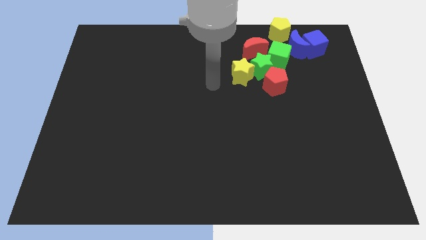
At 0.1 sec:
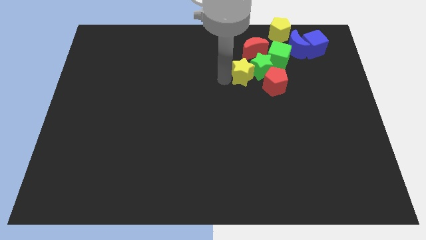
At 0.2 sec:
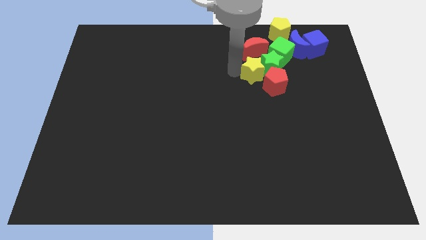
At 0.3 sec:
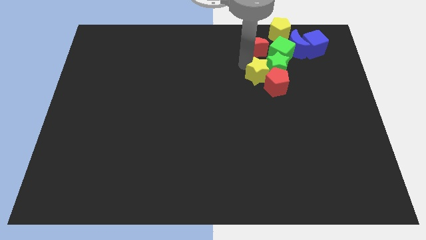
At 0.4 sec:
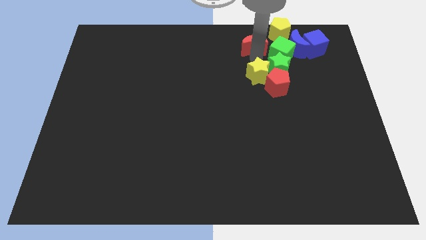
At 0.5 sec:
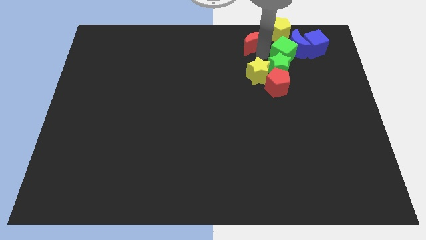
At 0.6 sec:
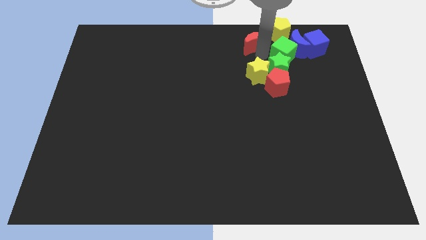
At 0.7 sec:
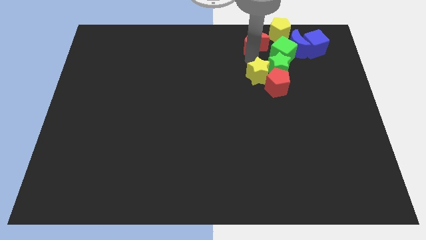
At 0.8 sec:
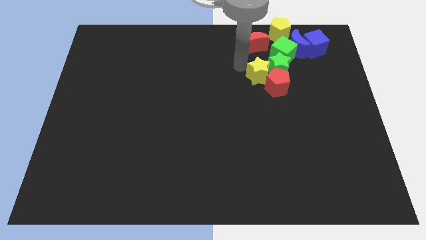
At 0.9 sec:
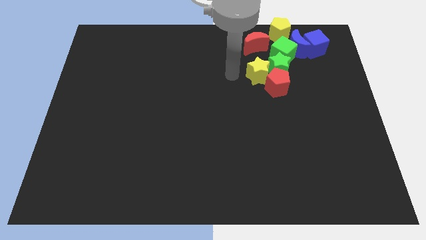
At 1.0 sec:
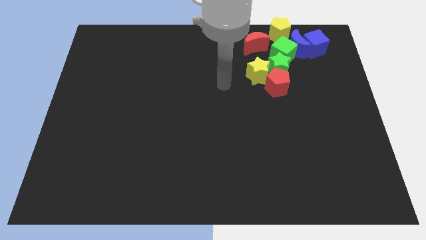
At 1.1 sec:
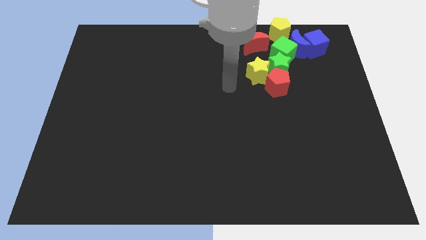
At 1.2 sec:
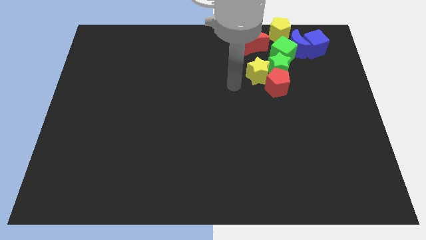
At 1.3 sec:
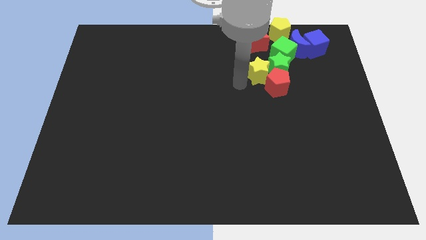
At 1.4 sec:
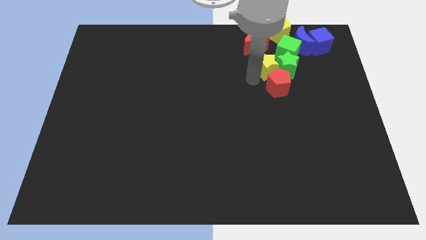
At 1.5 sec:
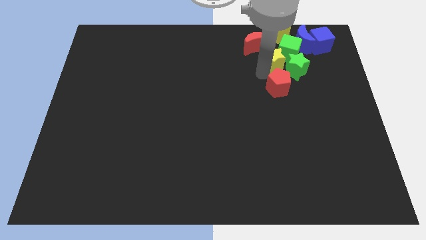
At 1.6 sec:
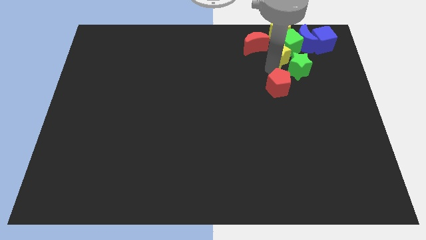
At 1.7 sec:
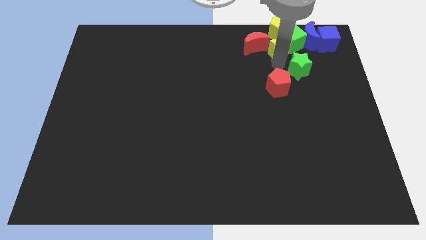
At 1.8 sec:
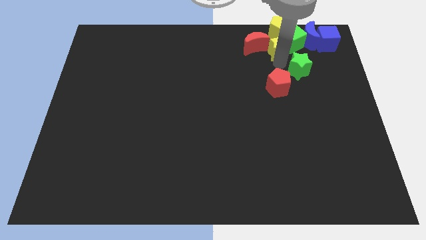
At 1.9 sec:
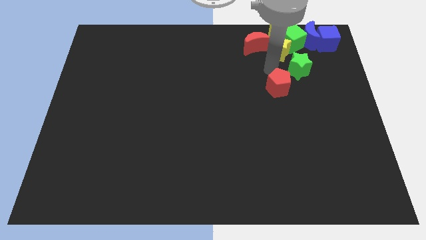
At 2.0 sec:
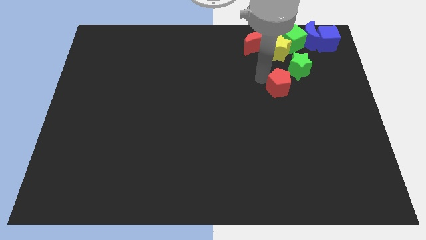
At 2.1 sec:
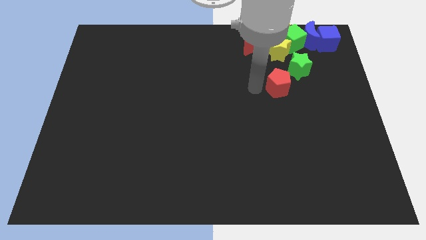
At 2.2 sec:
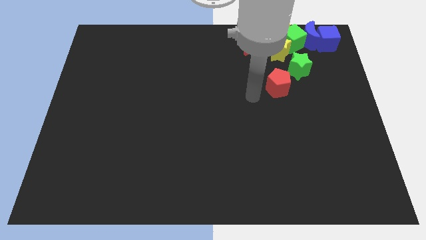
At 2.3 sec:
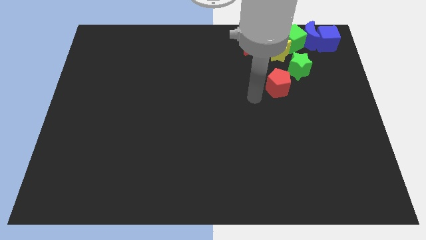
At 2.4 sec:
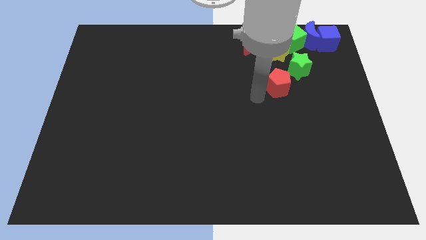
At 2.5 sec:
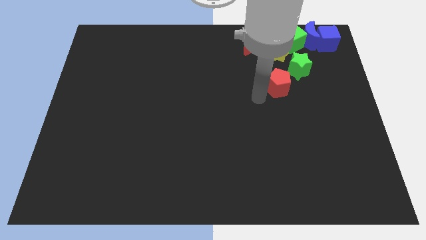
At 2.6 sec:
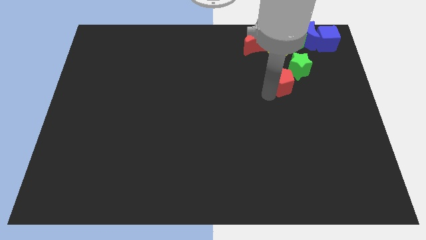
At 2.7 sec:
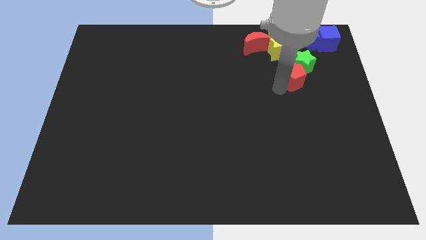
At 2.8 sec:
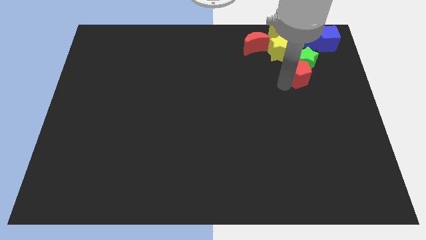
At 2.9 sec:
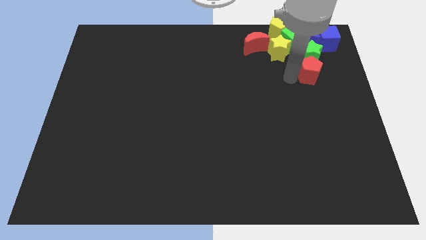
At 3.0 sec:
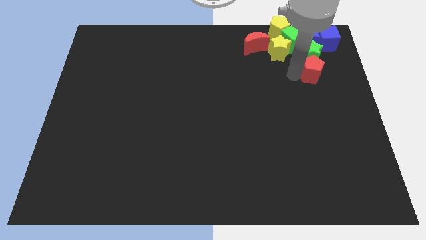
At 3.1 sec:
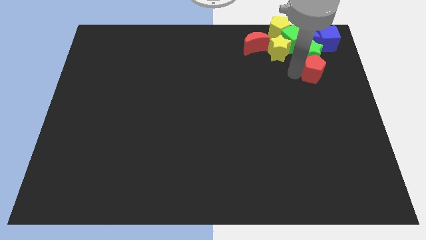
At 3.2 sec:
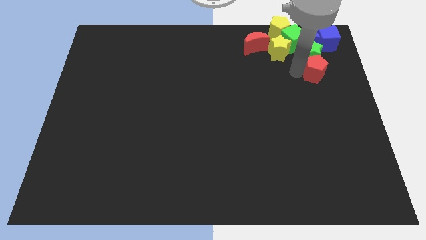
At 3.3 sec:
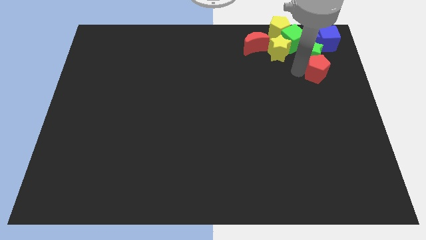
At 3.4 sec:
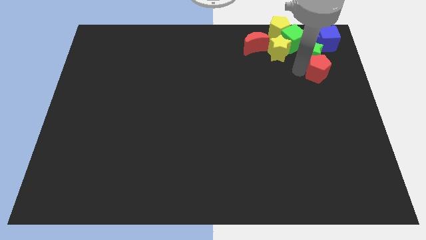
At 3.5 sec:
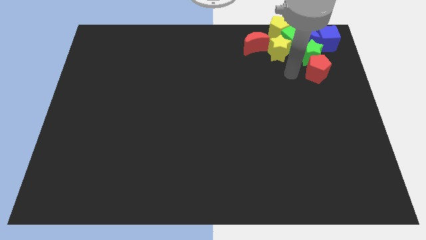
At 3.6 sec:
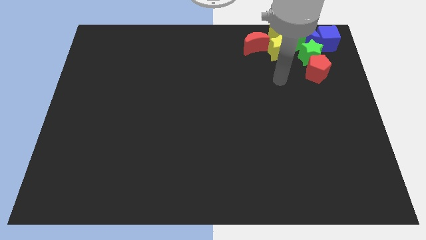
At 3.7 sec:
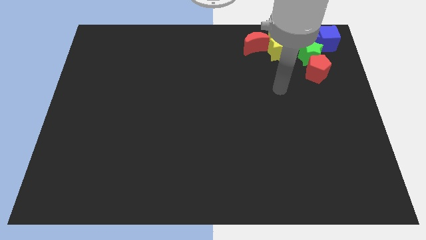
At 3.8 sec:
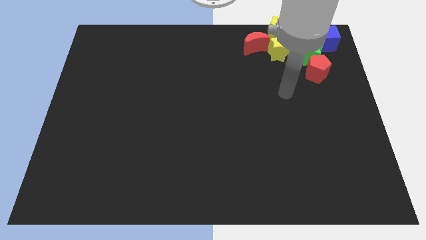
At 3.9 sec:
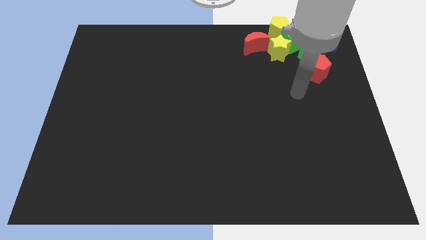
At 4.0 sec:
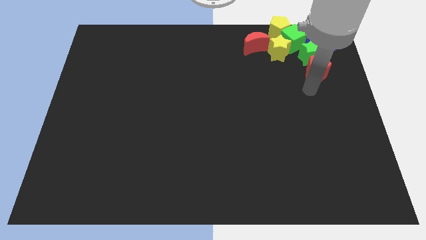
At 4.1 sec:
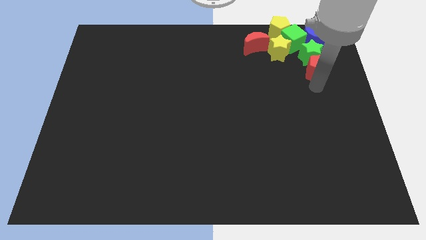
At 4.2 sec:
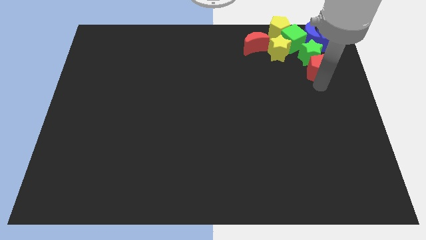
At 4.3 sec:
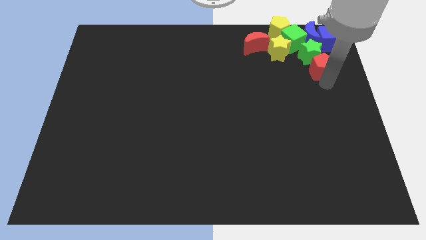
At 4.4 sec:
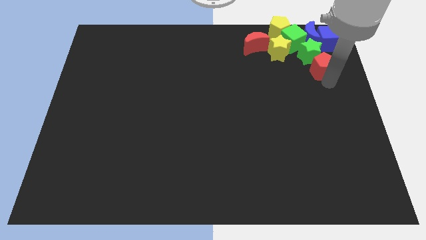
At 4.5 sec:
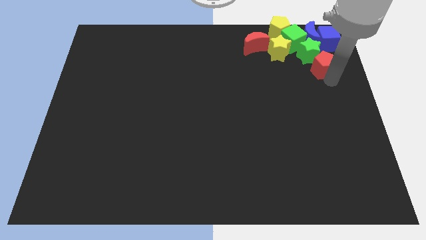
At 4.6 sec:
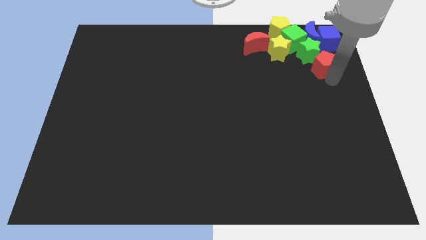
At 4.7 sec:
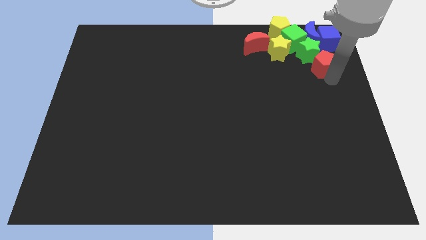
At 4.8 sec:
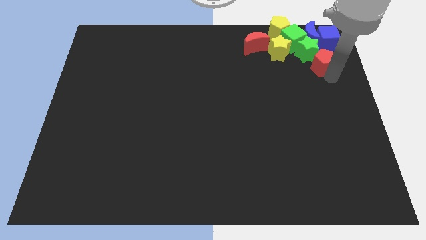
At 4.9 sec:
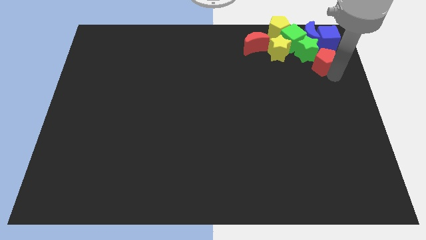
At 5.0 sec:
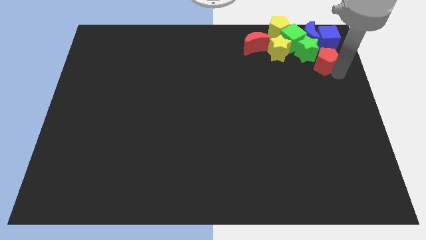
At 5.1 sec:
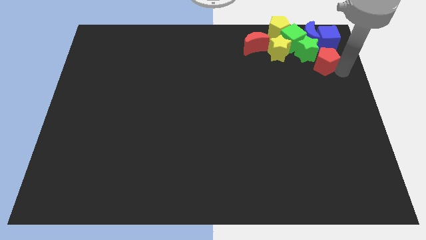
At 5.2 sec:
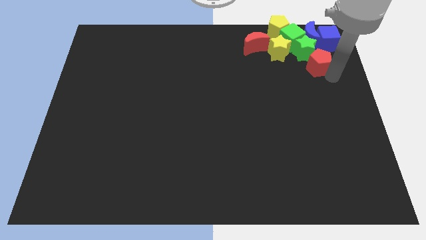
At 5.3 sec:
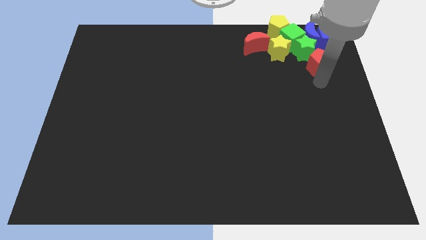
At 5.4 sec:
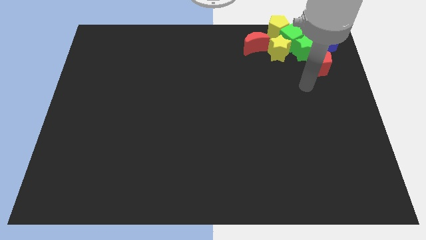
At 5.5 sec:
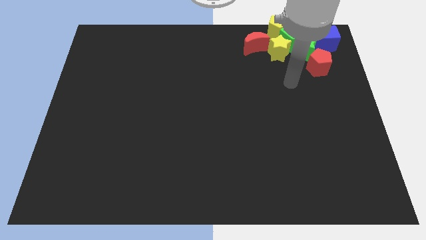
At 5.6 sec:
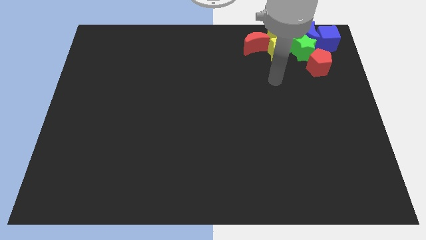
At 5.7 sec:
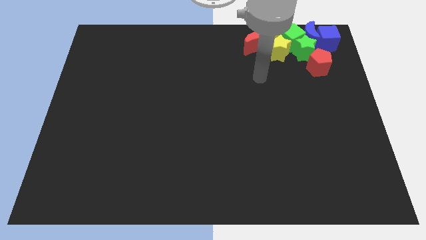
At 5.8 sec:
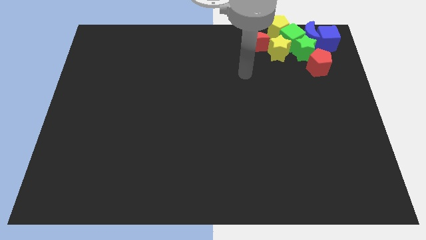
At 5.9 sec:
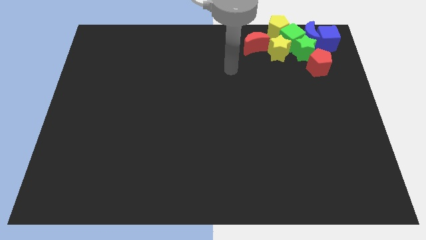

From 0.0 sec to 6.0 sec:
push all the blocks to the top right corner of the board

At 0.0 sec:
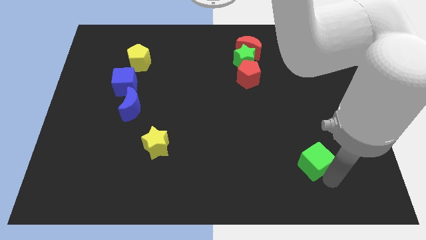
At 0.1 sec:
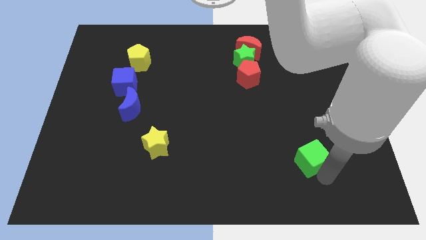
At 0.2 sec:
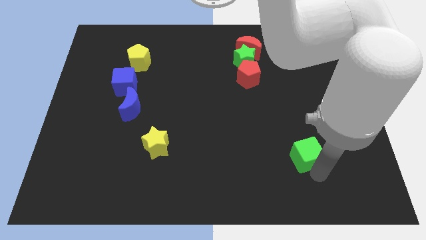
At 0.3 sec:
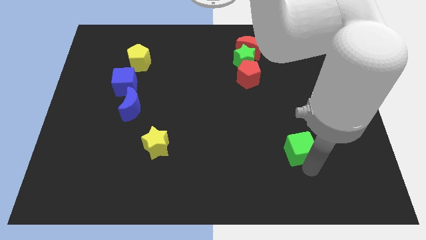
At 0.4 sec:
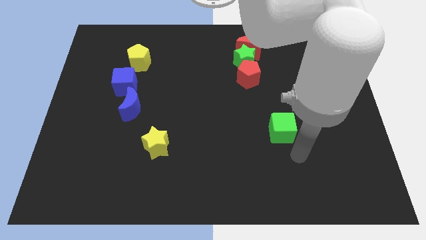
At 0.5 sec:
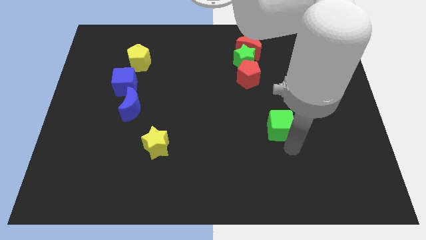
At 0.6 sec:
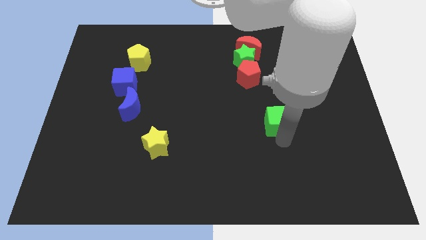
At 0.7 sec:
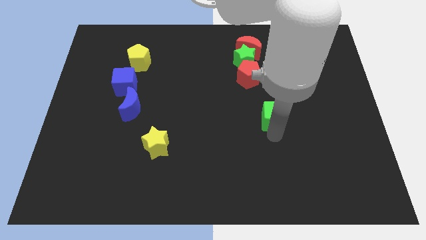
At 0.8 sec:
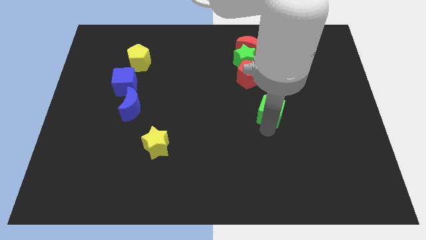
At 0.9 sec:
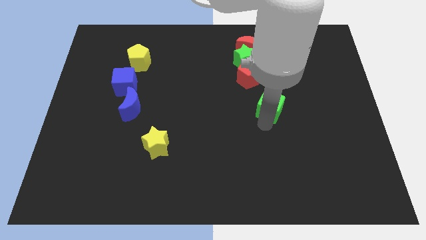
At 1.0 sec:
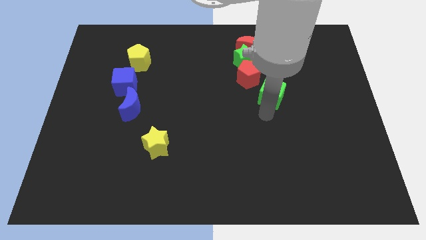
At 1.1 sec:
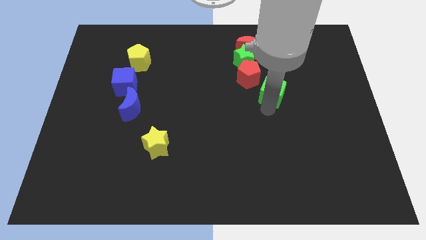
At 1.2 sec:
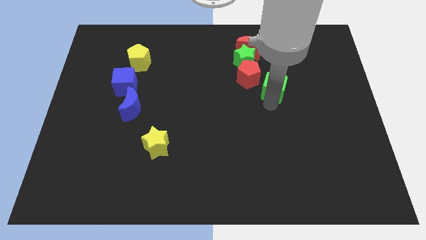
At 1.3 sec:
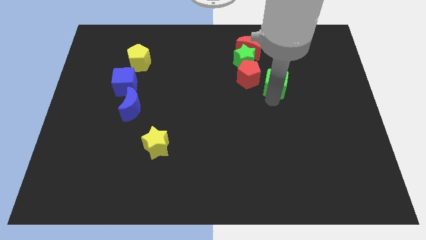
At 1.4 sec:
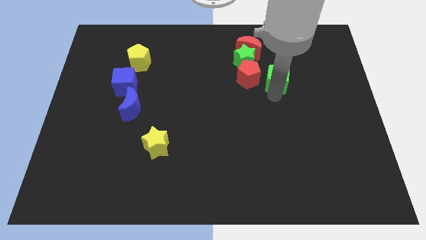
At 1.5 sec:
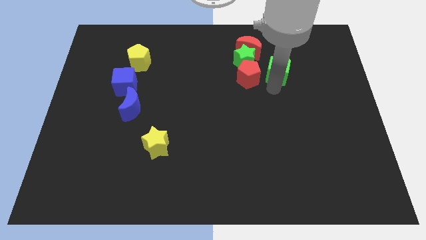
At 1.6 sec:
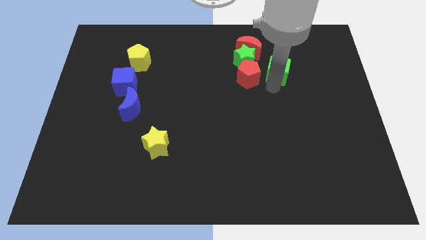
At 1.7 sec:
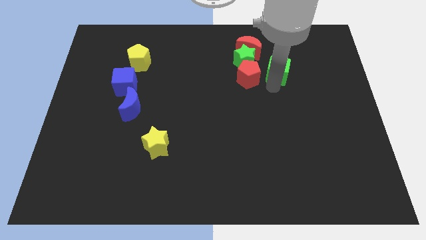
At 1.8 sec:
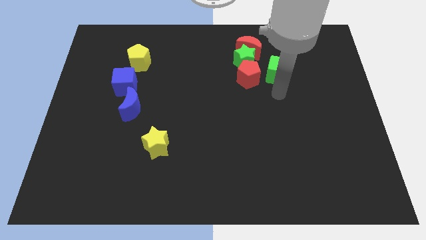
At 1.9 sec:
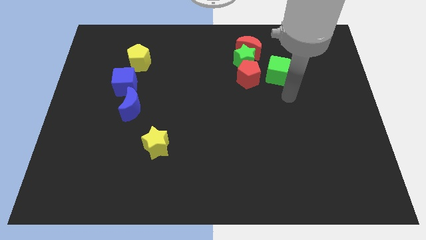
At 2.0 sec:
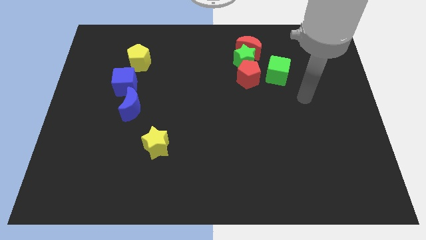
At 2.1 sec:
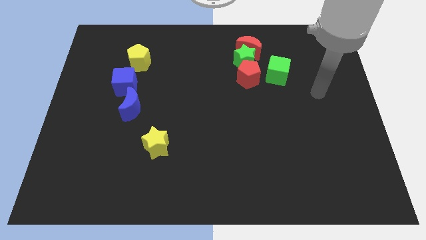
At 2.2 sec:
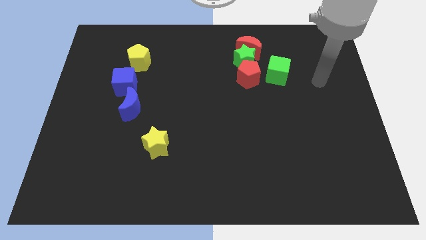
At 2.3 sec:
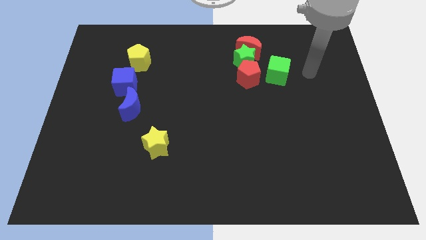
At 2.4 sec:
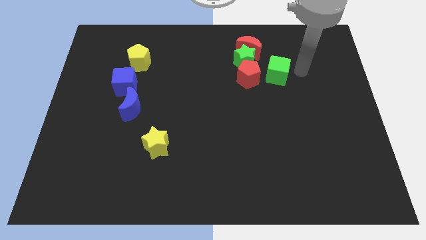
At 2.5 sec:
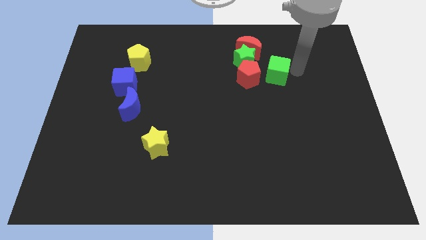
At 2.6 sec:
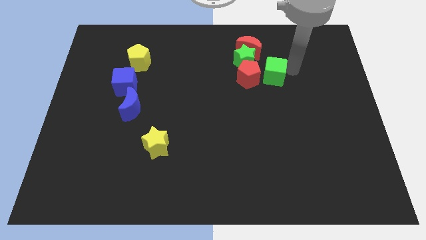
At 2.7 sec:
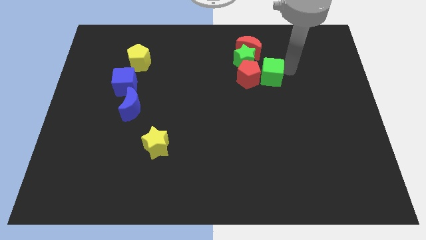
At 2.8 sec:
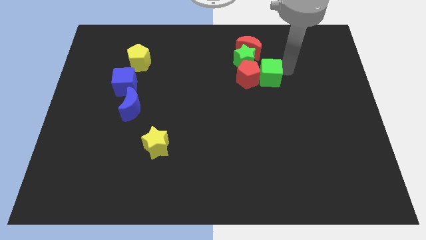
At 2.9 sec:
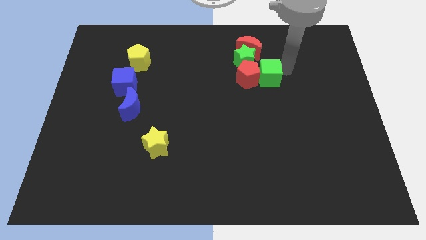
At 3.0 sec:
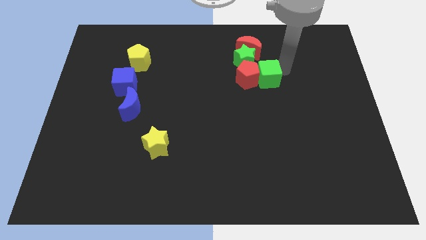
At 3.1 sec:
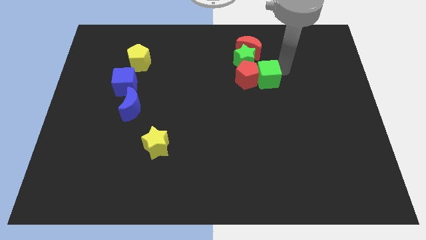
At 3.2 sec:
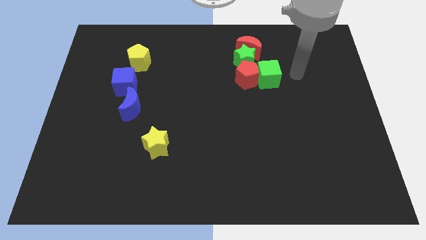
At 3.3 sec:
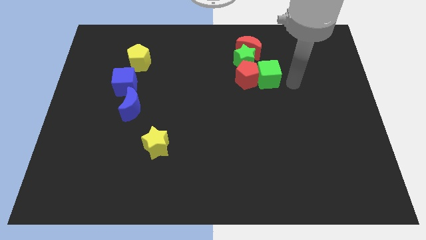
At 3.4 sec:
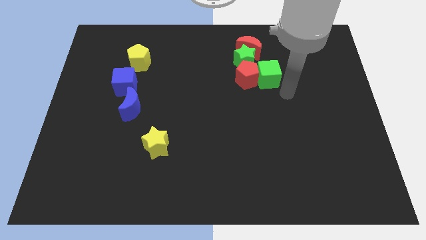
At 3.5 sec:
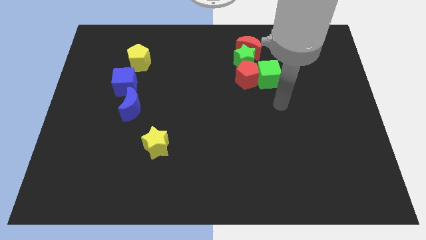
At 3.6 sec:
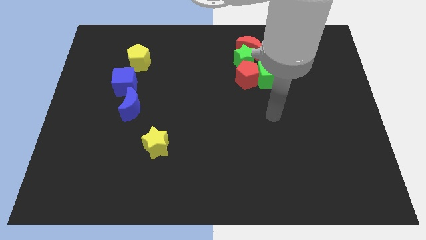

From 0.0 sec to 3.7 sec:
move green cube into the red pentagon
